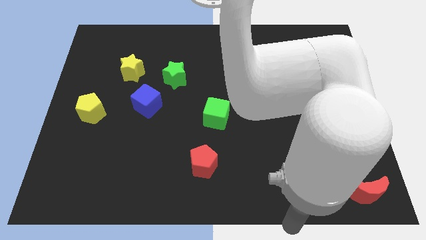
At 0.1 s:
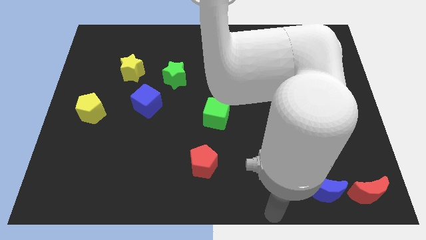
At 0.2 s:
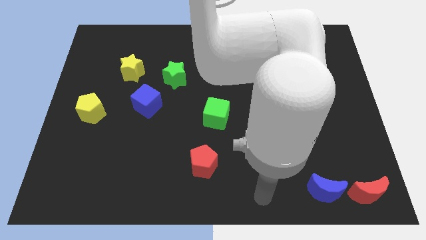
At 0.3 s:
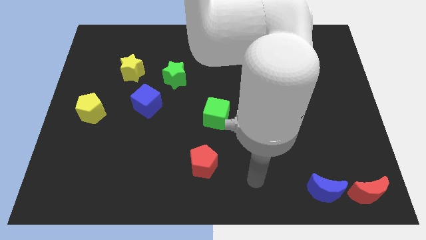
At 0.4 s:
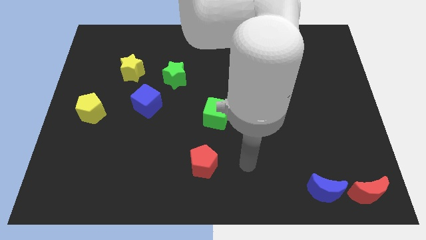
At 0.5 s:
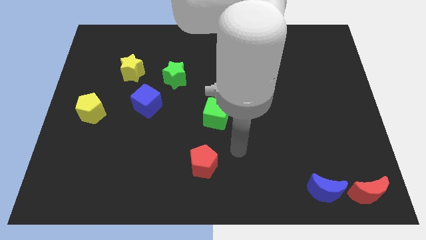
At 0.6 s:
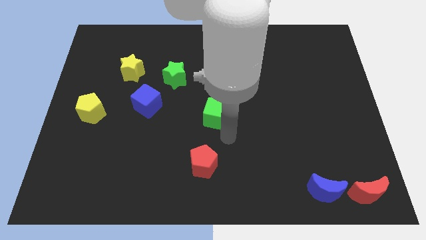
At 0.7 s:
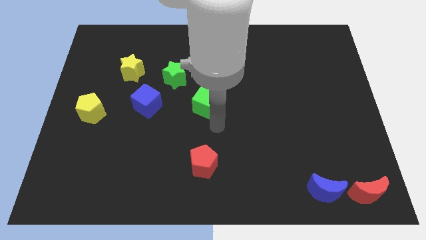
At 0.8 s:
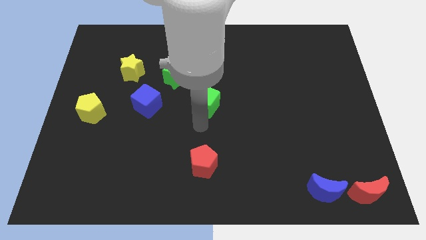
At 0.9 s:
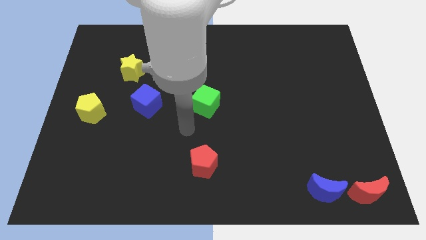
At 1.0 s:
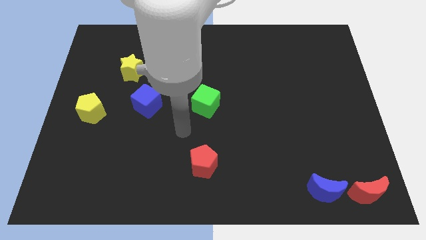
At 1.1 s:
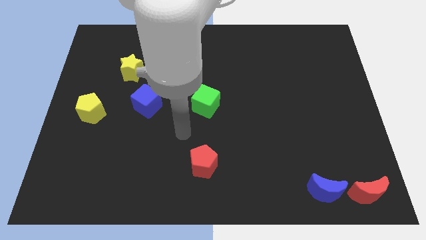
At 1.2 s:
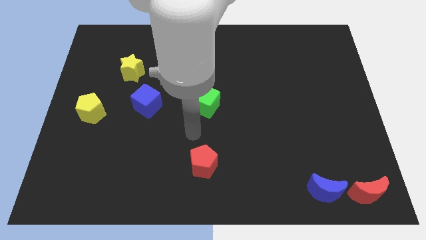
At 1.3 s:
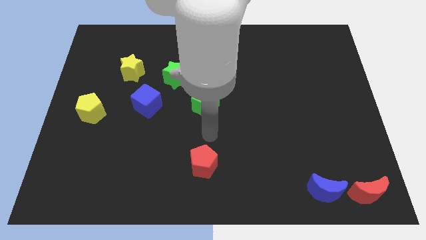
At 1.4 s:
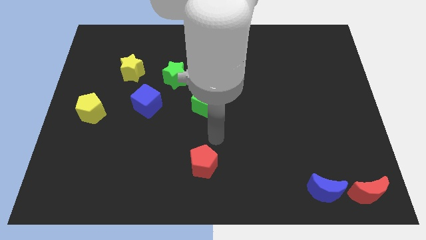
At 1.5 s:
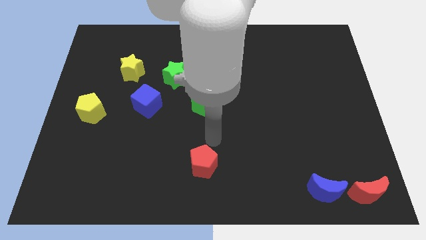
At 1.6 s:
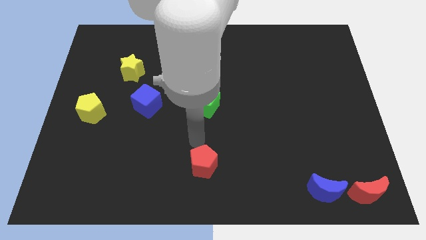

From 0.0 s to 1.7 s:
point the arm above the red pentagon

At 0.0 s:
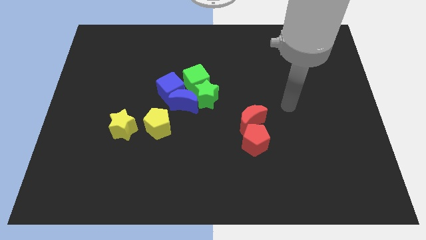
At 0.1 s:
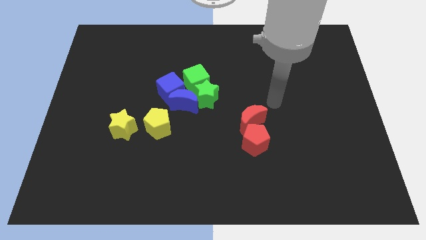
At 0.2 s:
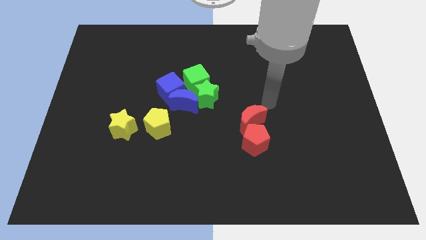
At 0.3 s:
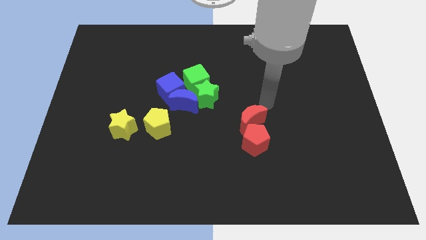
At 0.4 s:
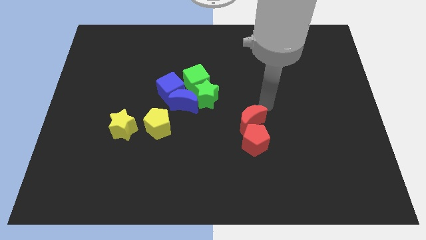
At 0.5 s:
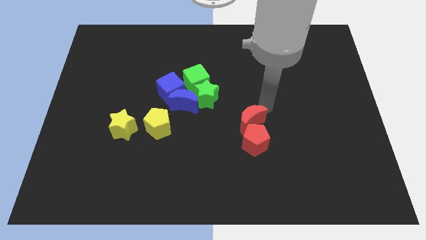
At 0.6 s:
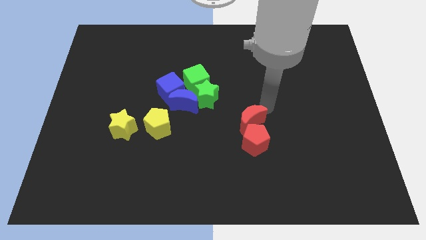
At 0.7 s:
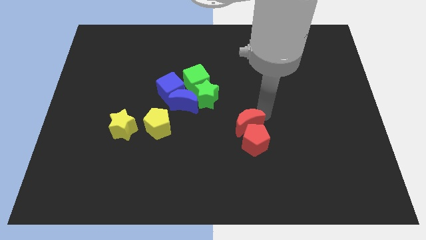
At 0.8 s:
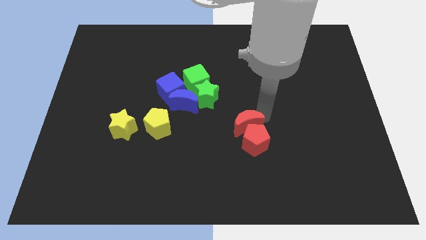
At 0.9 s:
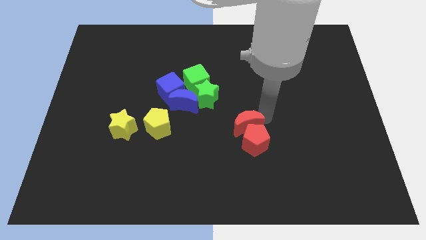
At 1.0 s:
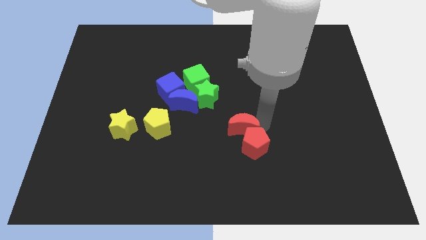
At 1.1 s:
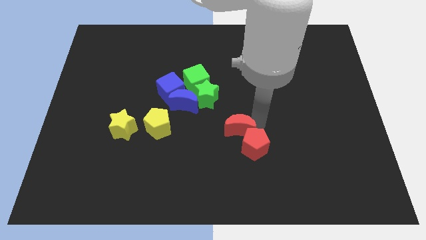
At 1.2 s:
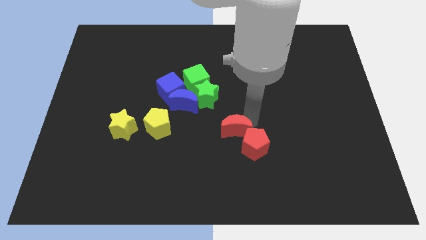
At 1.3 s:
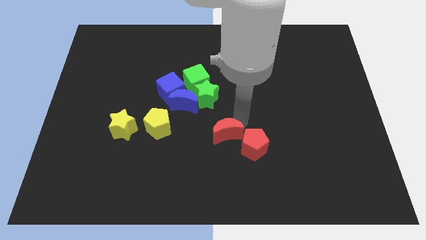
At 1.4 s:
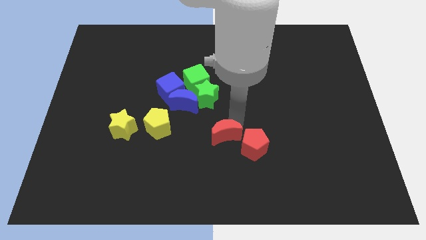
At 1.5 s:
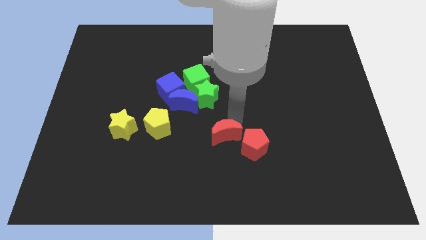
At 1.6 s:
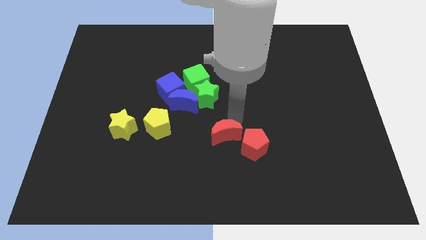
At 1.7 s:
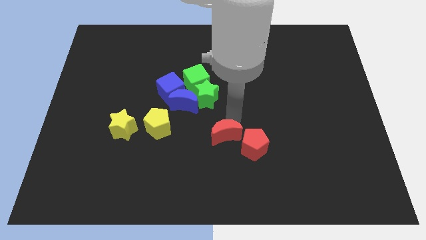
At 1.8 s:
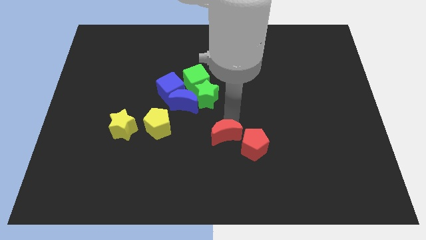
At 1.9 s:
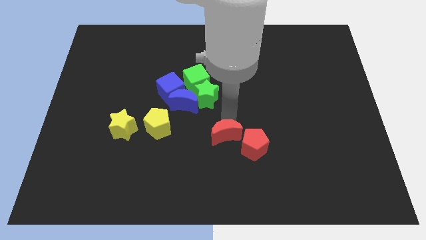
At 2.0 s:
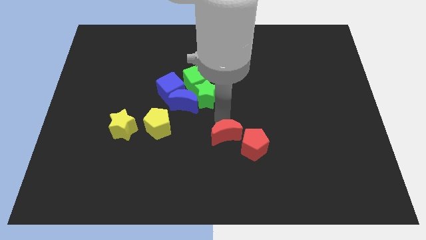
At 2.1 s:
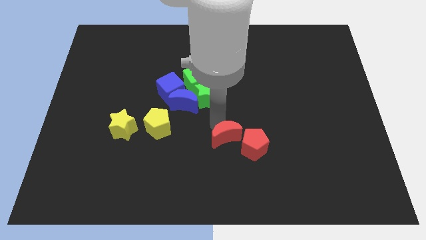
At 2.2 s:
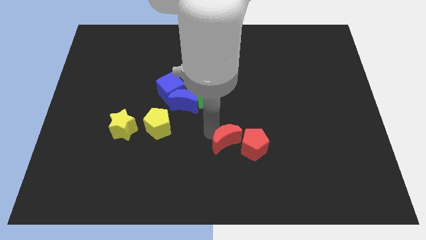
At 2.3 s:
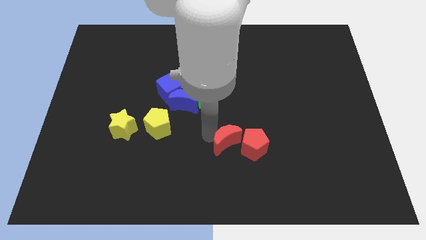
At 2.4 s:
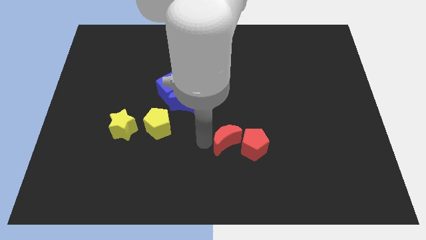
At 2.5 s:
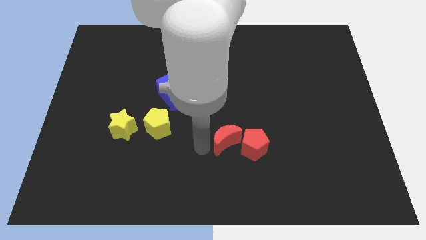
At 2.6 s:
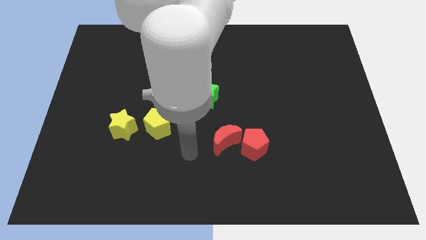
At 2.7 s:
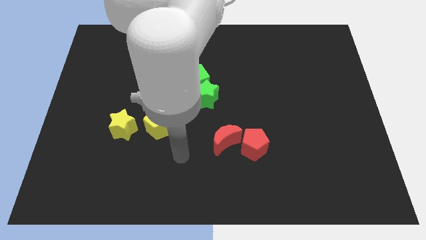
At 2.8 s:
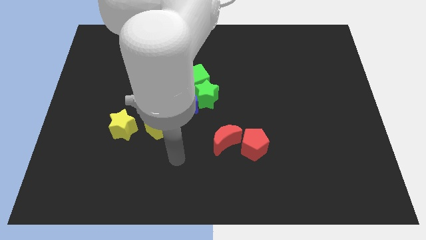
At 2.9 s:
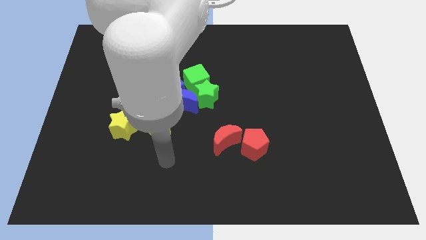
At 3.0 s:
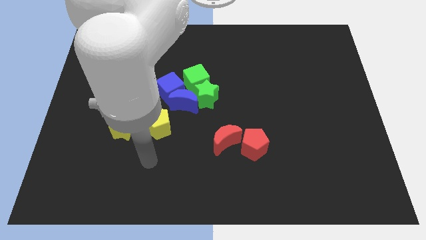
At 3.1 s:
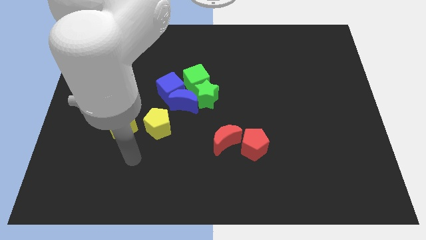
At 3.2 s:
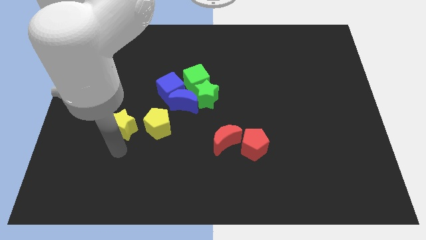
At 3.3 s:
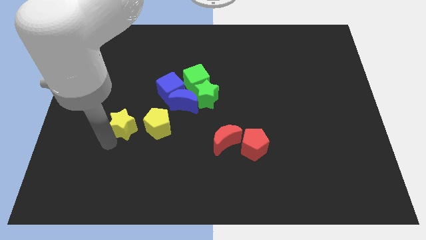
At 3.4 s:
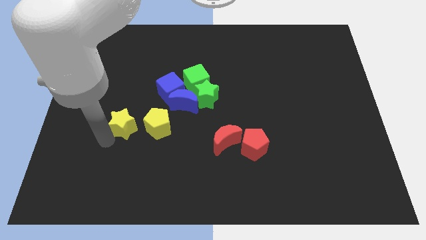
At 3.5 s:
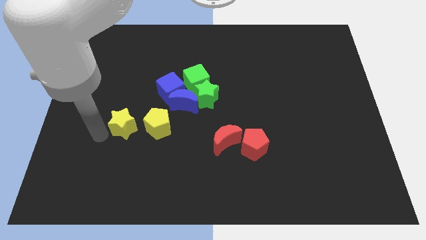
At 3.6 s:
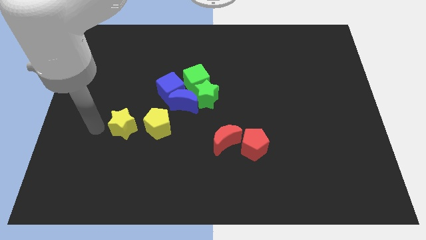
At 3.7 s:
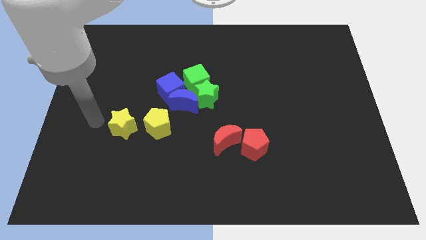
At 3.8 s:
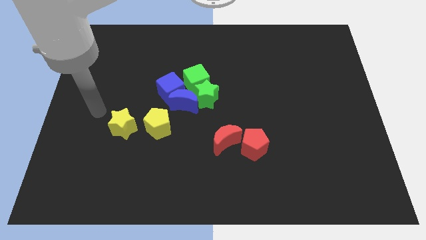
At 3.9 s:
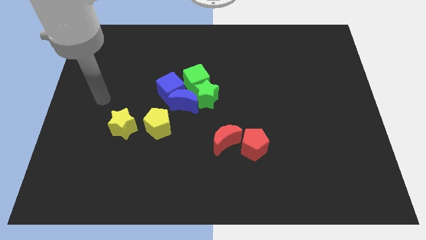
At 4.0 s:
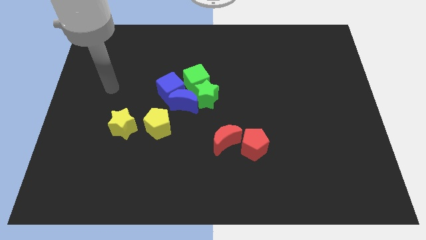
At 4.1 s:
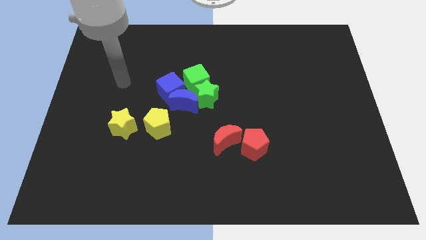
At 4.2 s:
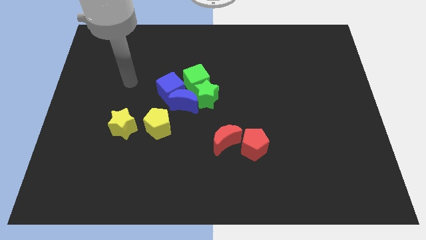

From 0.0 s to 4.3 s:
slide both the red blocks away from each other

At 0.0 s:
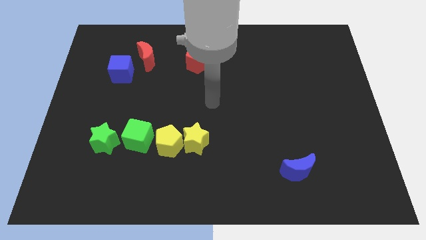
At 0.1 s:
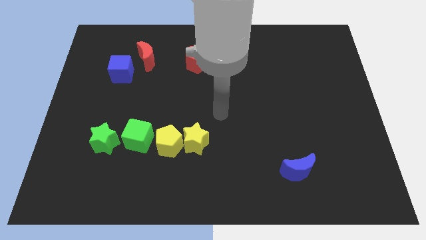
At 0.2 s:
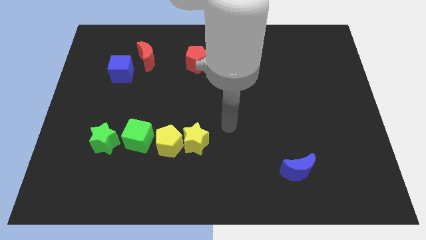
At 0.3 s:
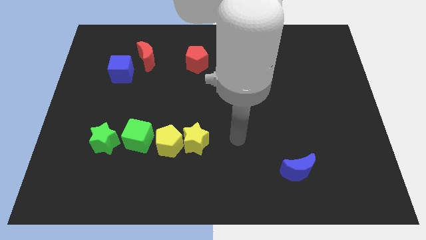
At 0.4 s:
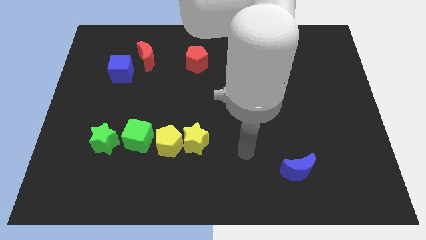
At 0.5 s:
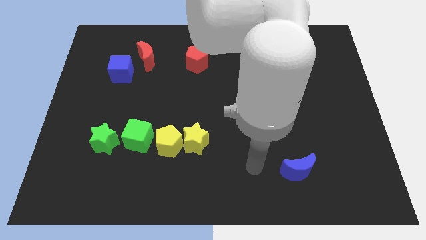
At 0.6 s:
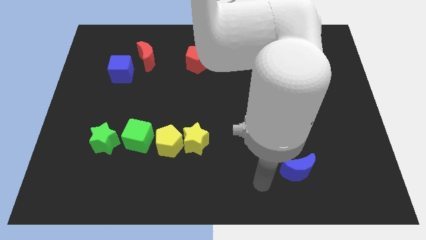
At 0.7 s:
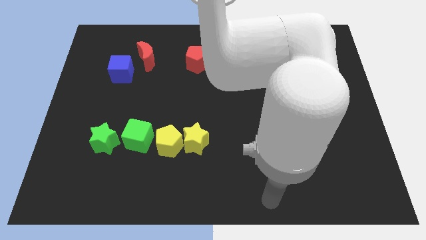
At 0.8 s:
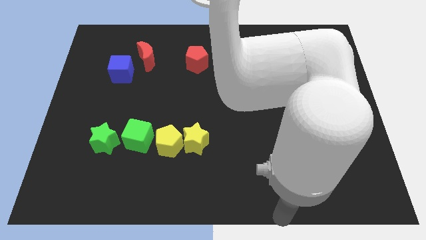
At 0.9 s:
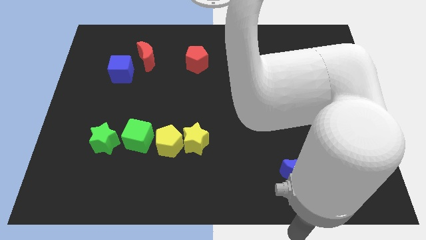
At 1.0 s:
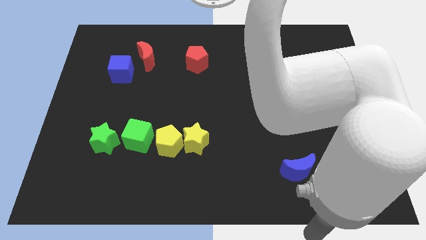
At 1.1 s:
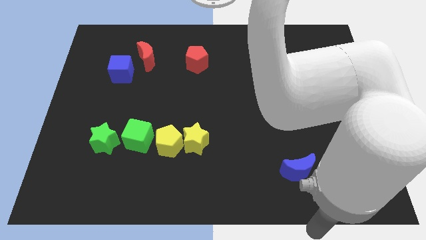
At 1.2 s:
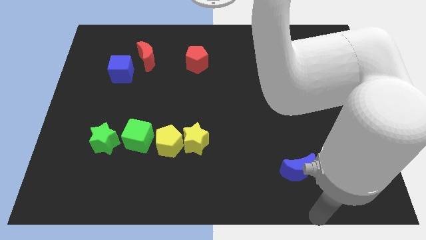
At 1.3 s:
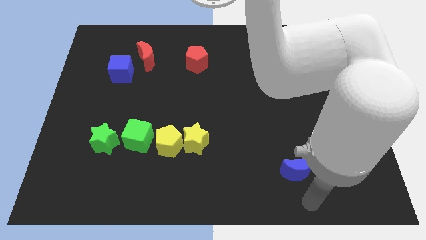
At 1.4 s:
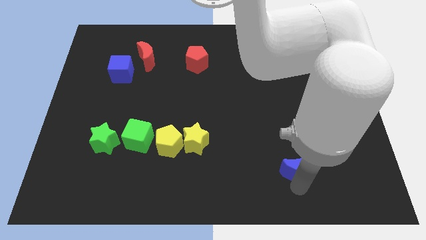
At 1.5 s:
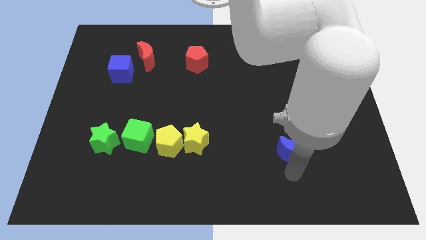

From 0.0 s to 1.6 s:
drag the blue crescent slightly to the top side of the board

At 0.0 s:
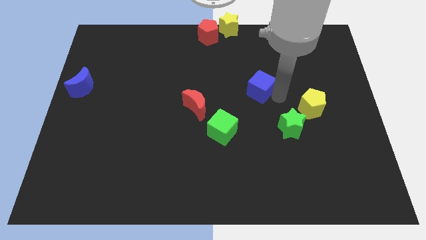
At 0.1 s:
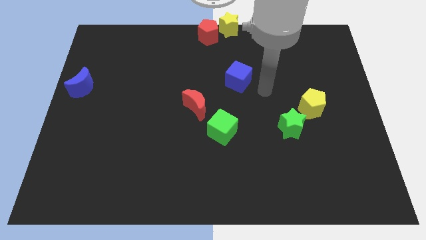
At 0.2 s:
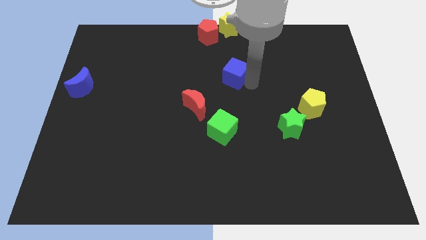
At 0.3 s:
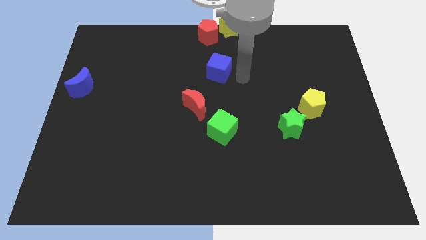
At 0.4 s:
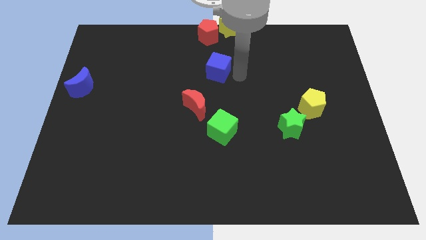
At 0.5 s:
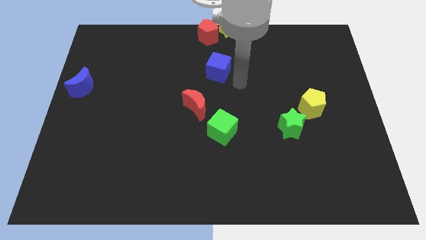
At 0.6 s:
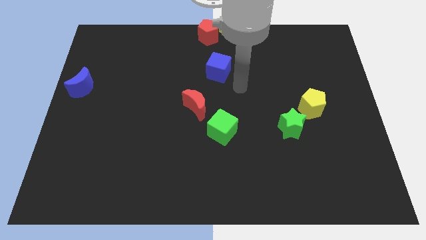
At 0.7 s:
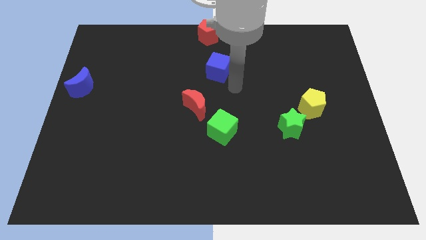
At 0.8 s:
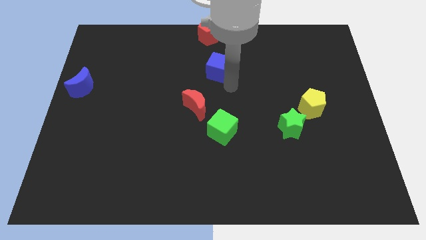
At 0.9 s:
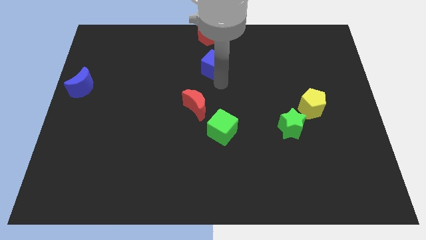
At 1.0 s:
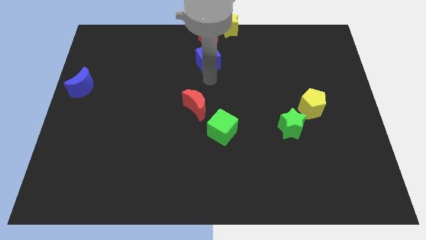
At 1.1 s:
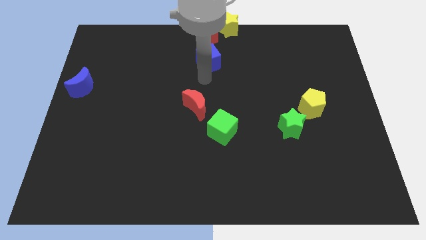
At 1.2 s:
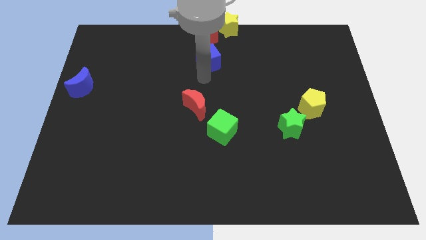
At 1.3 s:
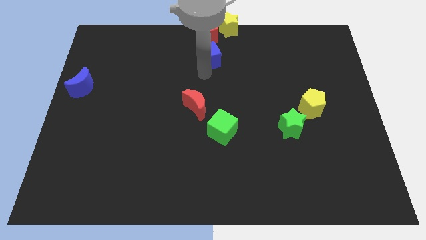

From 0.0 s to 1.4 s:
place the blue cube in between the red blocks
